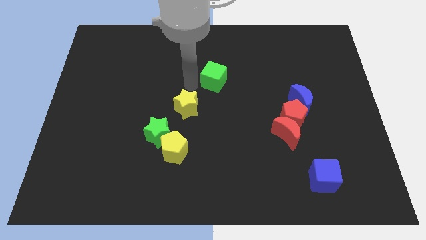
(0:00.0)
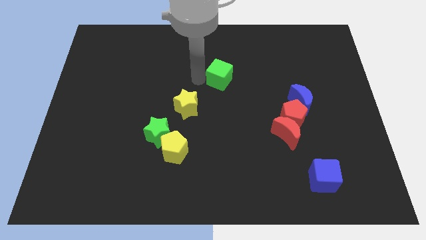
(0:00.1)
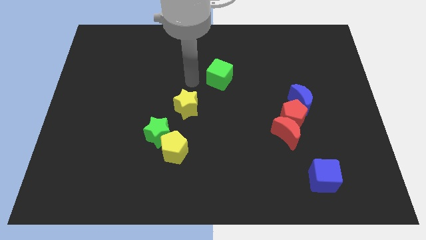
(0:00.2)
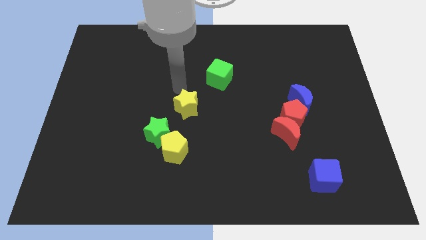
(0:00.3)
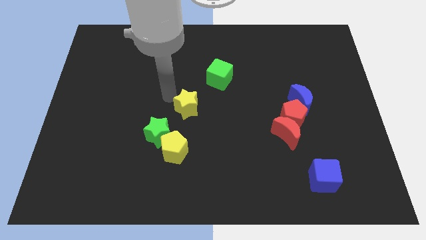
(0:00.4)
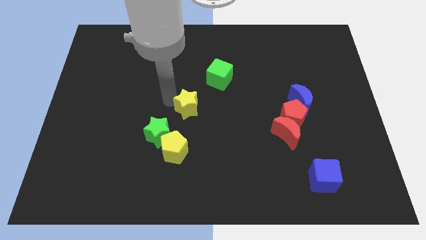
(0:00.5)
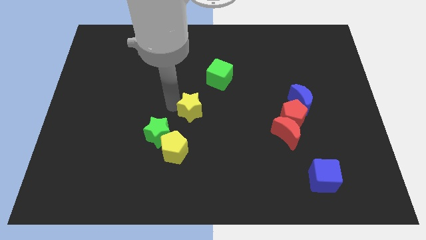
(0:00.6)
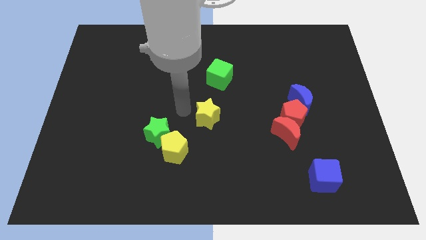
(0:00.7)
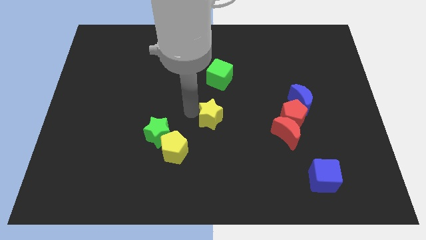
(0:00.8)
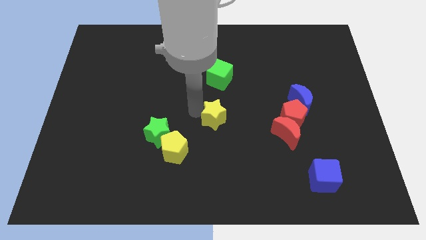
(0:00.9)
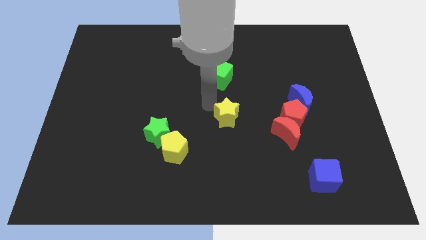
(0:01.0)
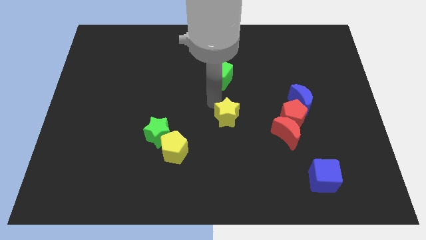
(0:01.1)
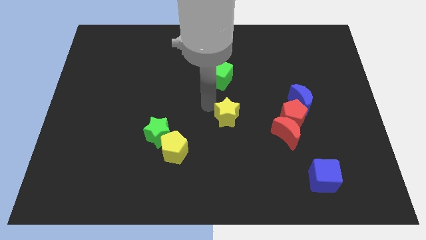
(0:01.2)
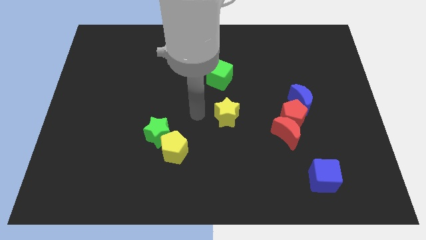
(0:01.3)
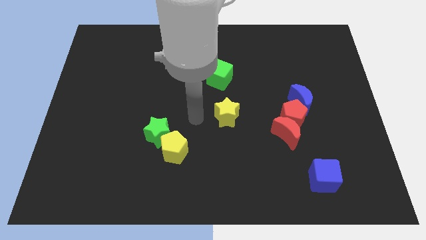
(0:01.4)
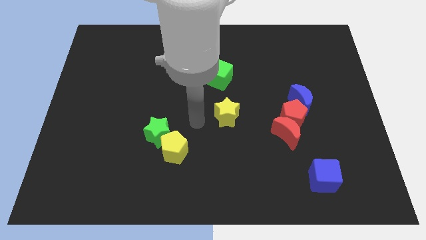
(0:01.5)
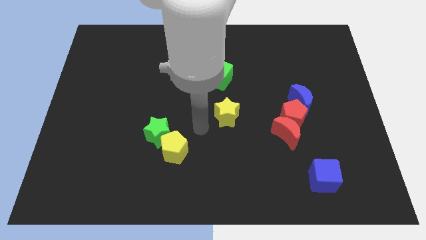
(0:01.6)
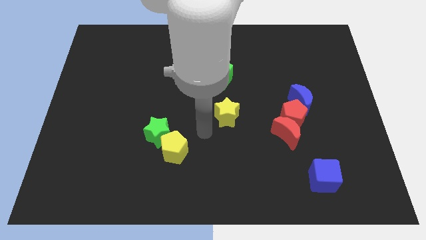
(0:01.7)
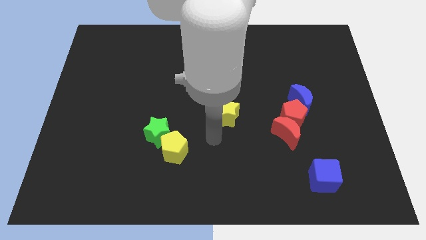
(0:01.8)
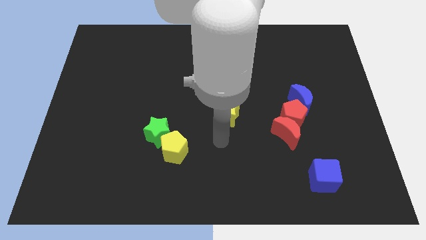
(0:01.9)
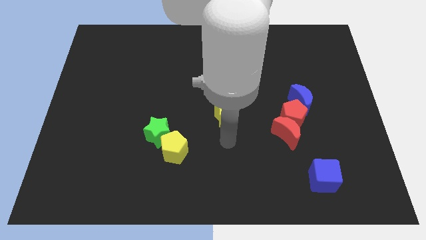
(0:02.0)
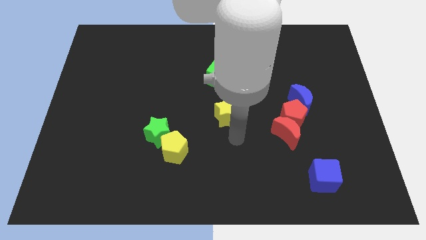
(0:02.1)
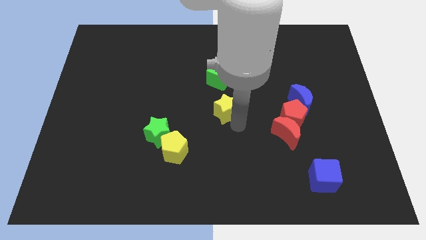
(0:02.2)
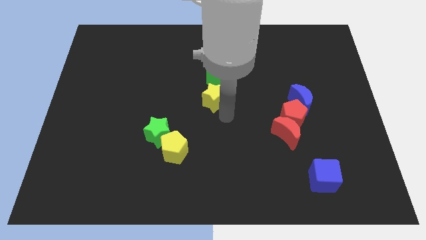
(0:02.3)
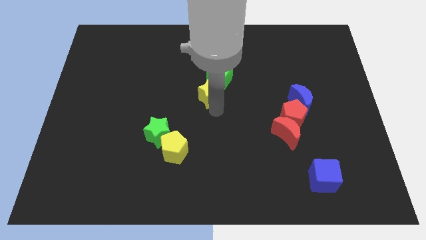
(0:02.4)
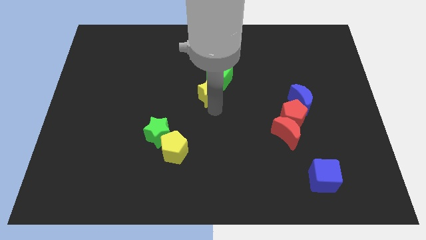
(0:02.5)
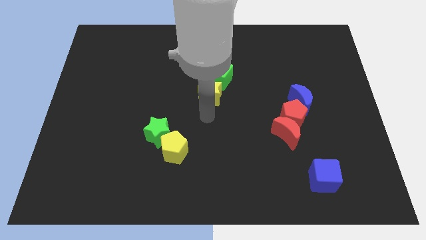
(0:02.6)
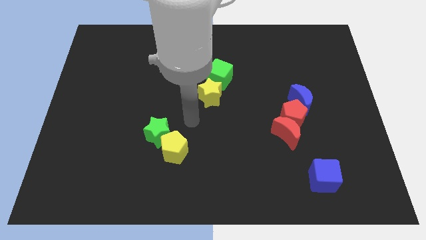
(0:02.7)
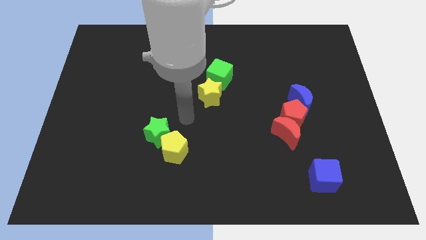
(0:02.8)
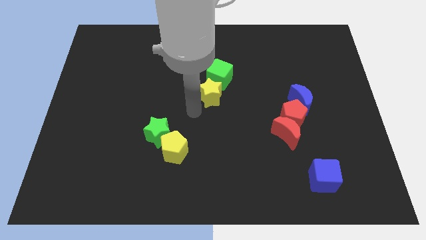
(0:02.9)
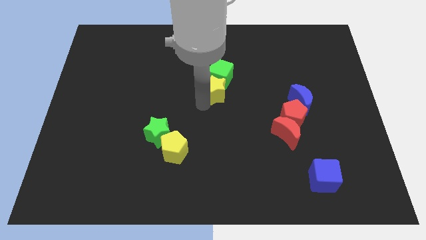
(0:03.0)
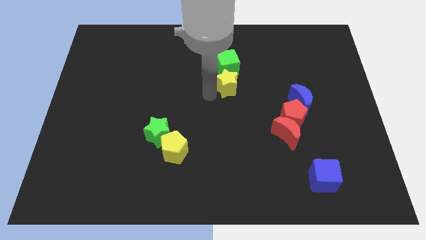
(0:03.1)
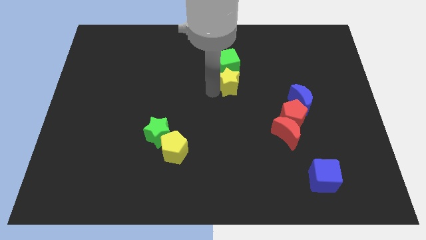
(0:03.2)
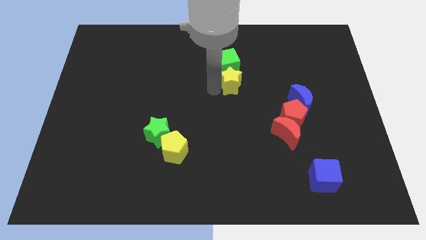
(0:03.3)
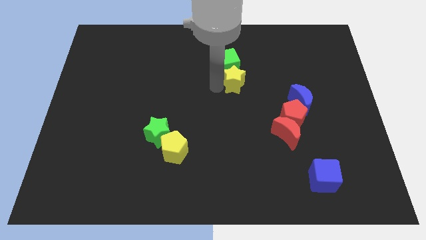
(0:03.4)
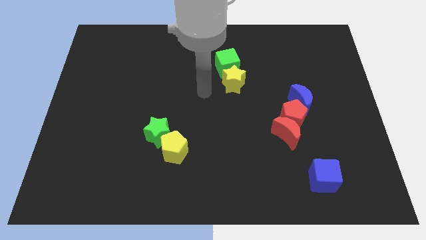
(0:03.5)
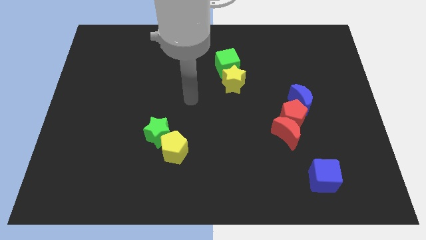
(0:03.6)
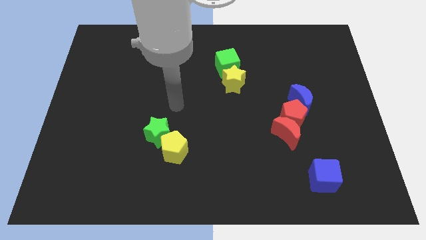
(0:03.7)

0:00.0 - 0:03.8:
move the green cube and the yellow star to the top of the board

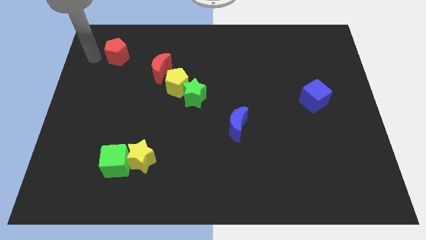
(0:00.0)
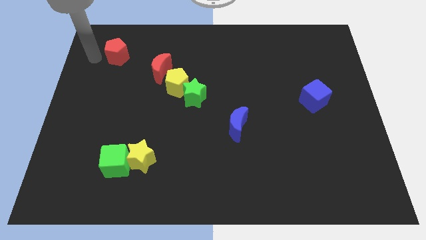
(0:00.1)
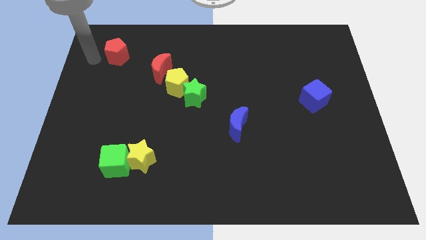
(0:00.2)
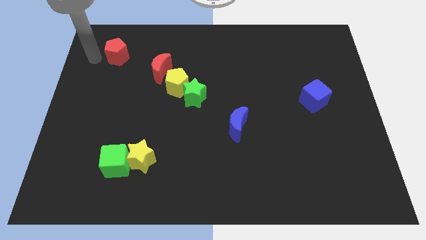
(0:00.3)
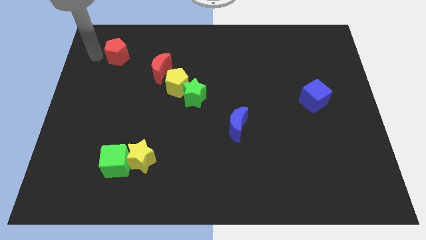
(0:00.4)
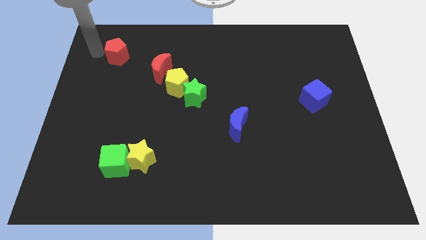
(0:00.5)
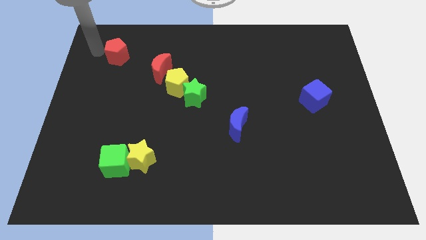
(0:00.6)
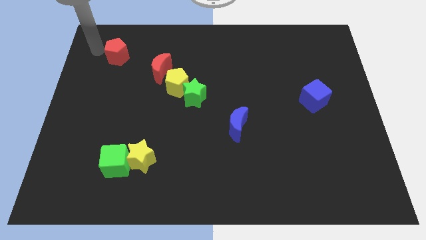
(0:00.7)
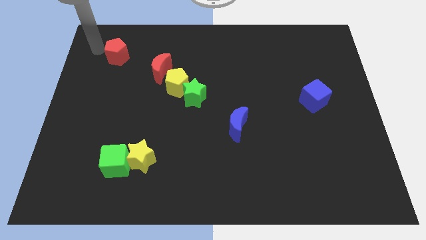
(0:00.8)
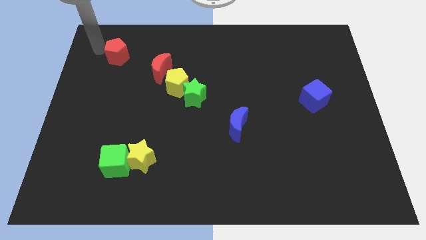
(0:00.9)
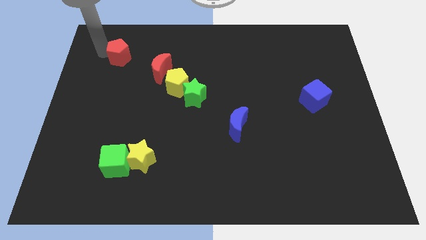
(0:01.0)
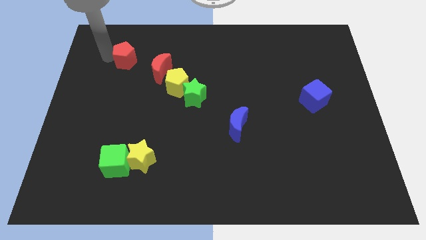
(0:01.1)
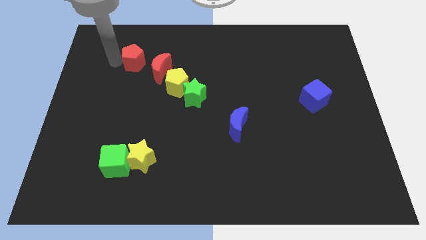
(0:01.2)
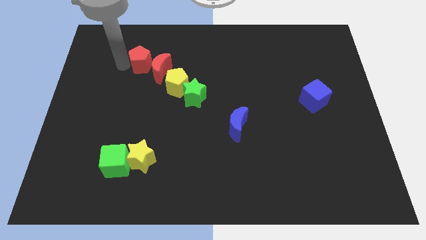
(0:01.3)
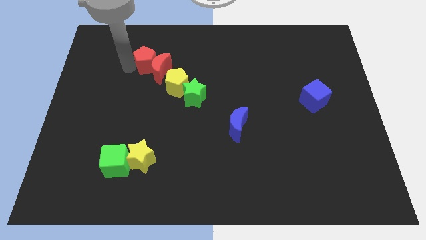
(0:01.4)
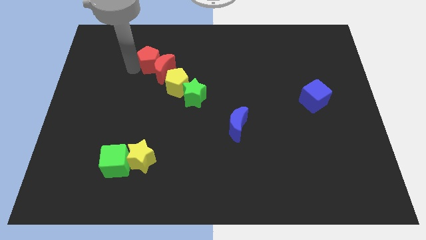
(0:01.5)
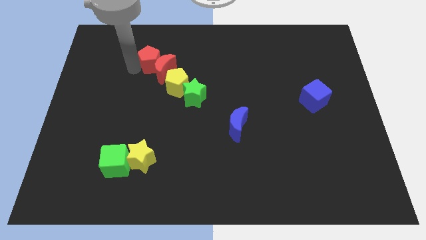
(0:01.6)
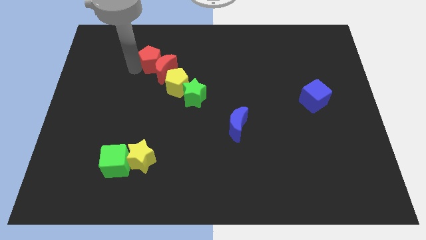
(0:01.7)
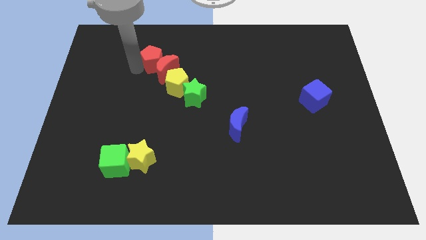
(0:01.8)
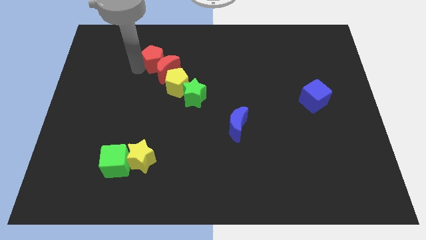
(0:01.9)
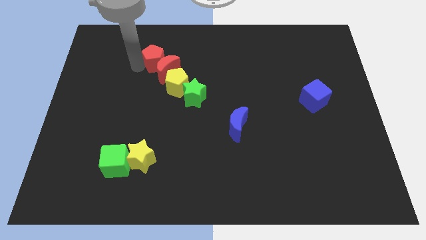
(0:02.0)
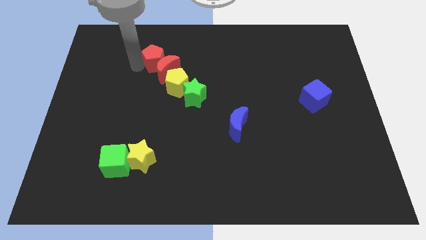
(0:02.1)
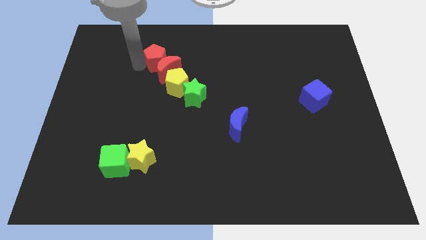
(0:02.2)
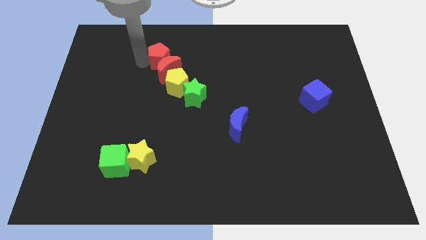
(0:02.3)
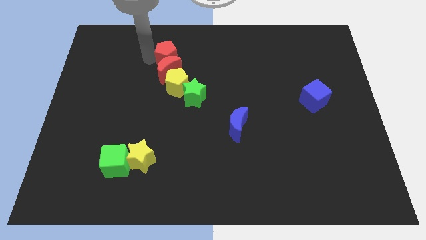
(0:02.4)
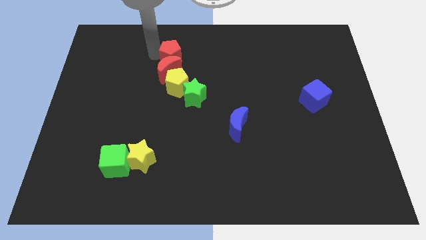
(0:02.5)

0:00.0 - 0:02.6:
push red pentagon above red moon

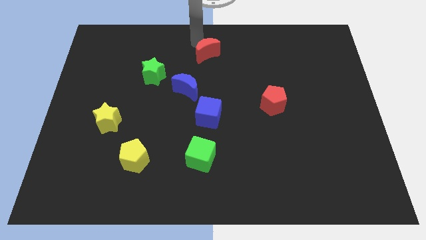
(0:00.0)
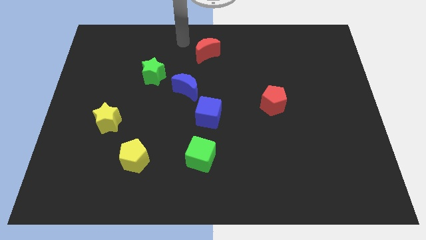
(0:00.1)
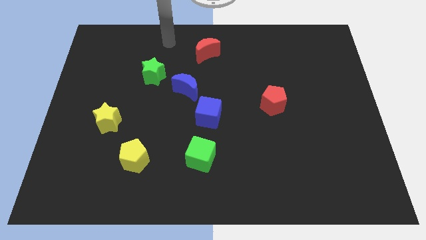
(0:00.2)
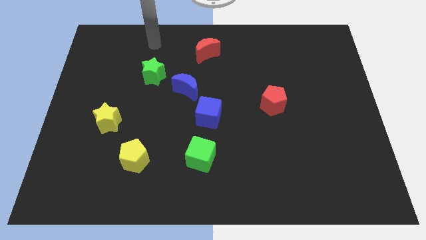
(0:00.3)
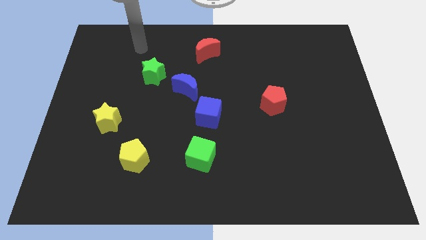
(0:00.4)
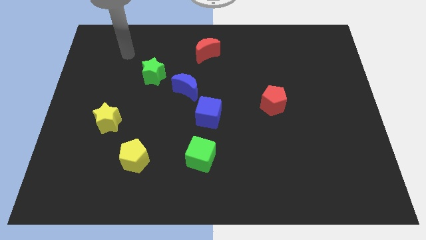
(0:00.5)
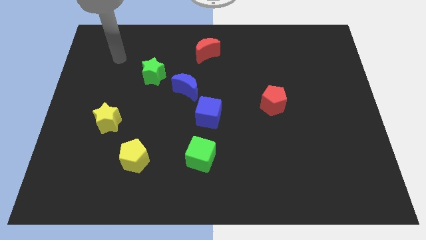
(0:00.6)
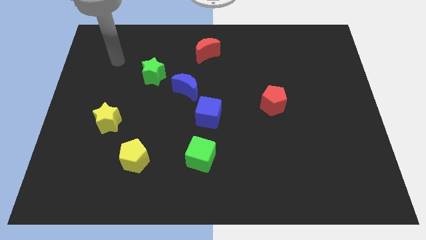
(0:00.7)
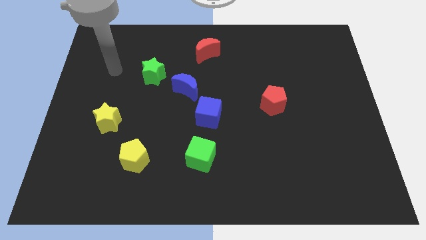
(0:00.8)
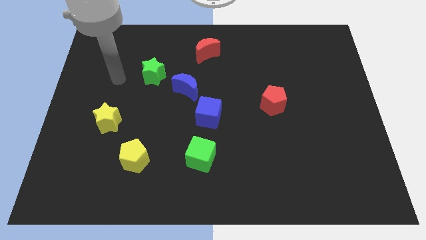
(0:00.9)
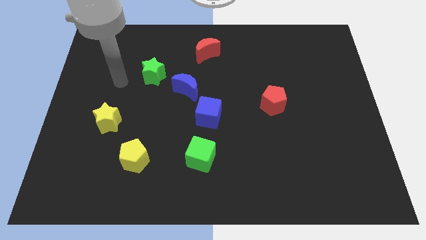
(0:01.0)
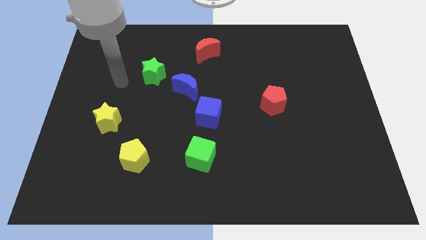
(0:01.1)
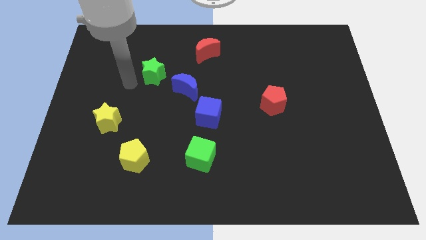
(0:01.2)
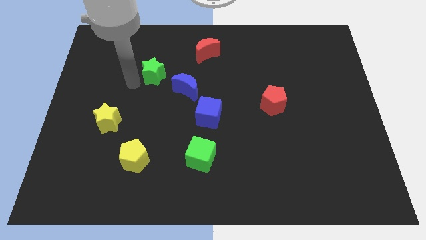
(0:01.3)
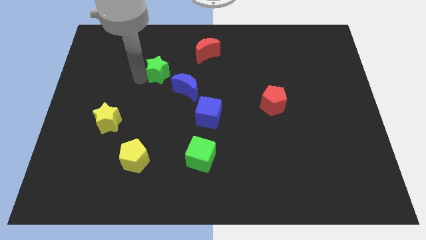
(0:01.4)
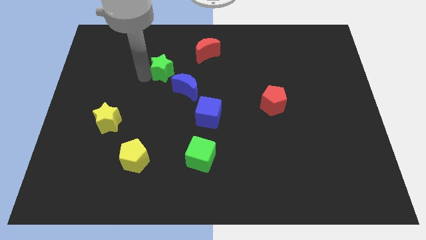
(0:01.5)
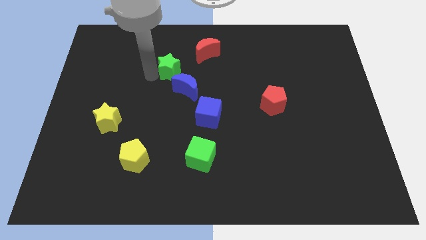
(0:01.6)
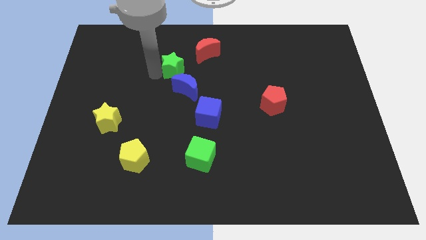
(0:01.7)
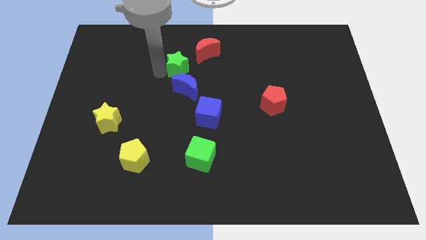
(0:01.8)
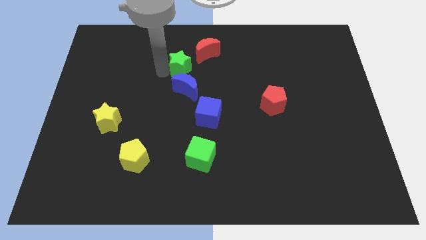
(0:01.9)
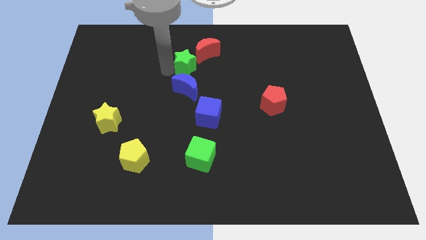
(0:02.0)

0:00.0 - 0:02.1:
move the green star close to the red moon

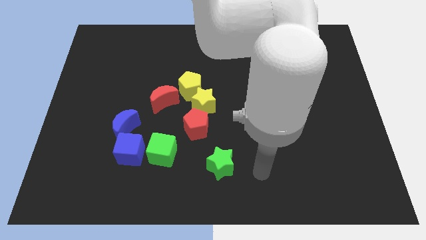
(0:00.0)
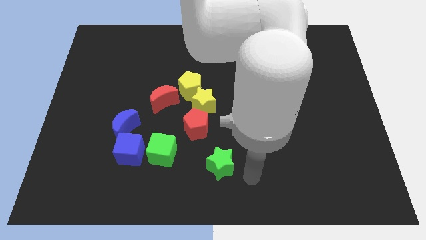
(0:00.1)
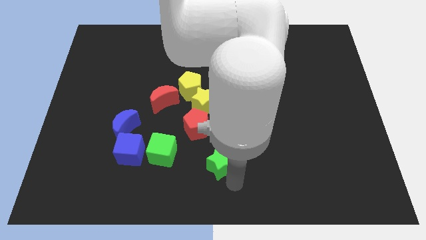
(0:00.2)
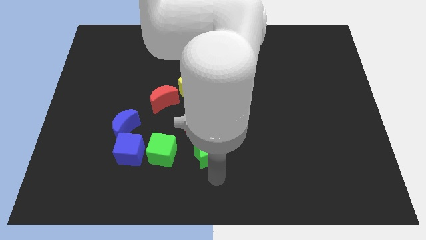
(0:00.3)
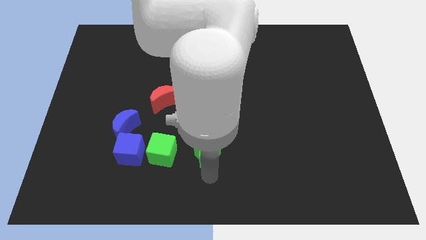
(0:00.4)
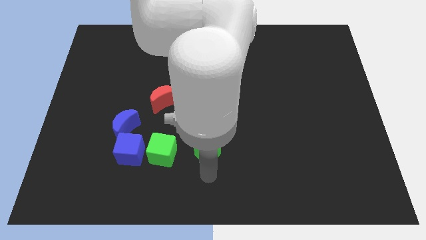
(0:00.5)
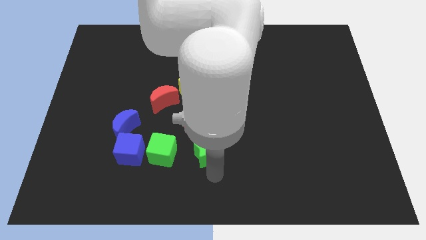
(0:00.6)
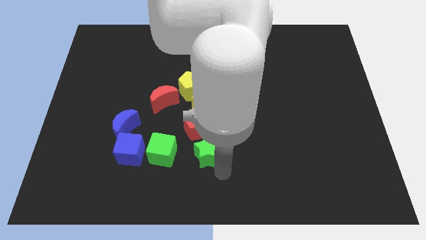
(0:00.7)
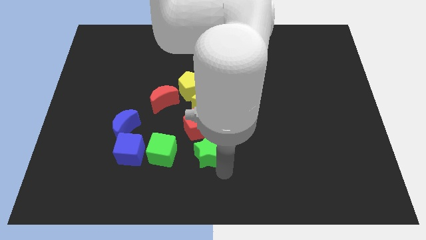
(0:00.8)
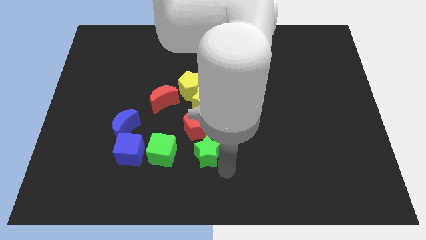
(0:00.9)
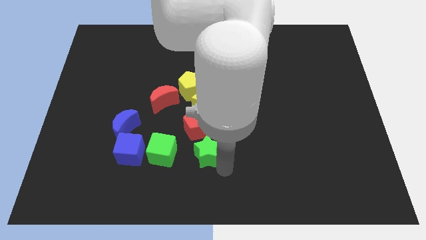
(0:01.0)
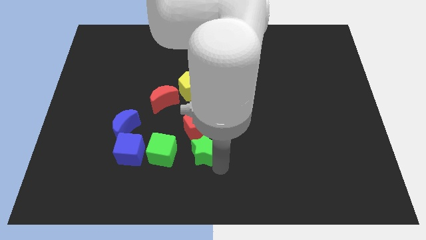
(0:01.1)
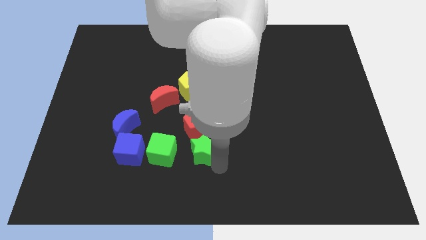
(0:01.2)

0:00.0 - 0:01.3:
move the green star parallel to the green cube
